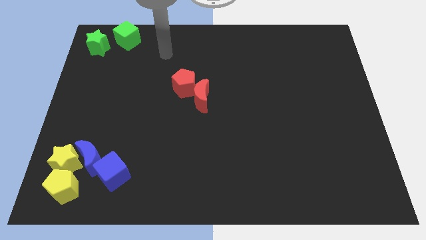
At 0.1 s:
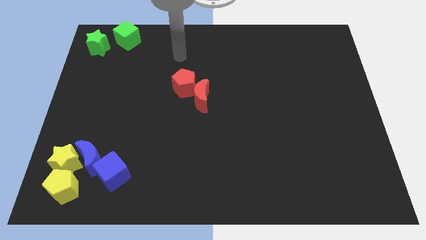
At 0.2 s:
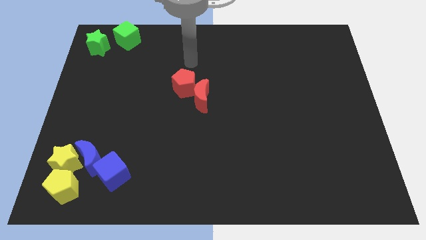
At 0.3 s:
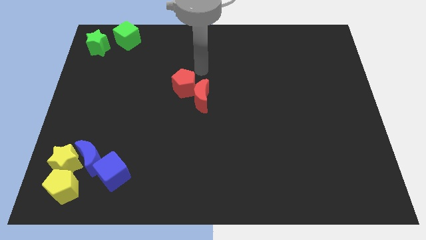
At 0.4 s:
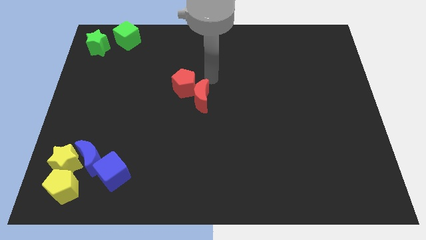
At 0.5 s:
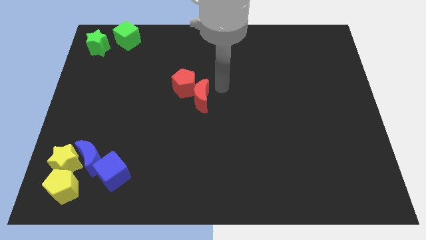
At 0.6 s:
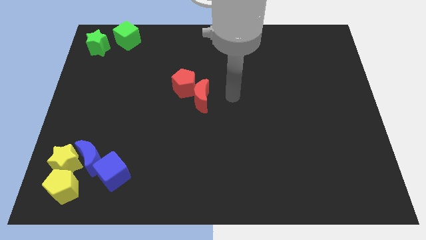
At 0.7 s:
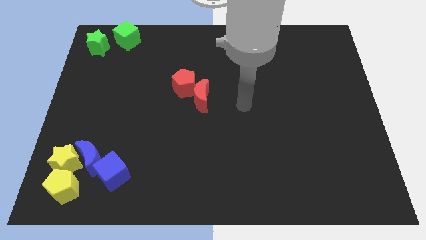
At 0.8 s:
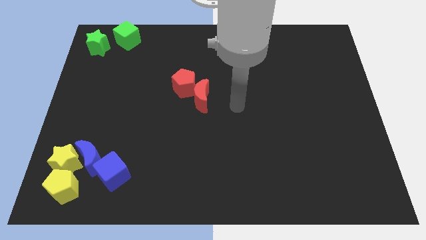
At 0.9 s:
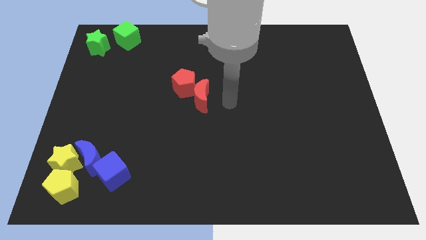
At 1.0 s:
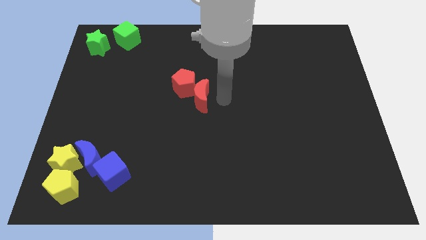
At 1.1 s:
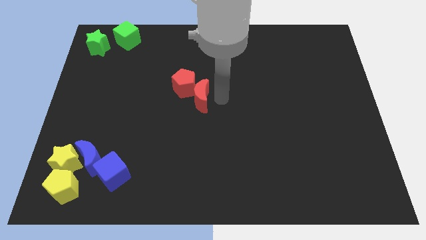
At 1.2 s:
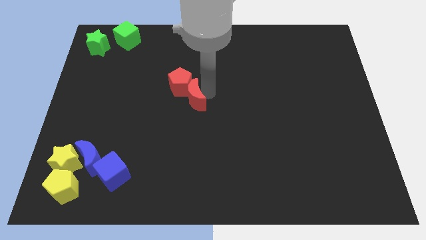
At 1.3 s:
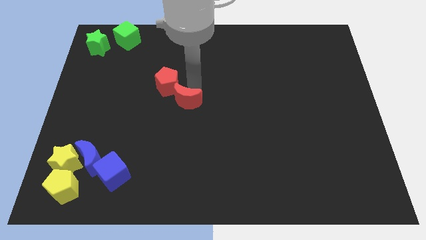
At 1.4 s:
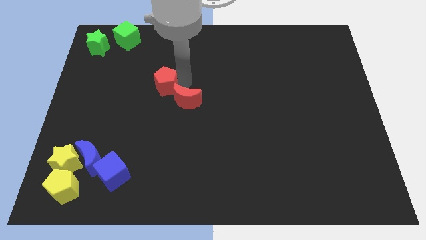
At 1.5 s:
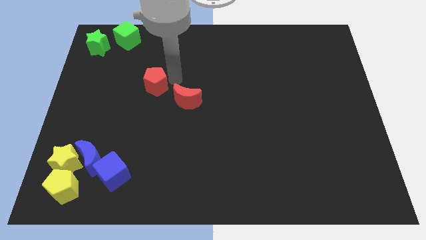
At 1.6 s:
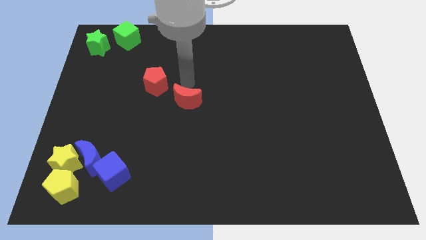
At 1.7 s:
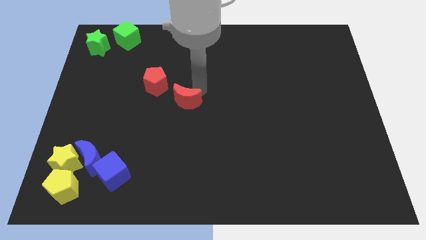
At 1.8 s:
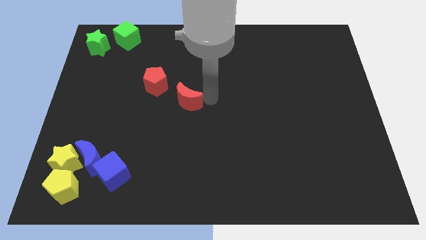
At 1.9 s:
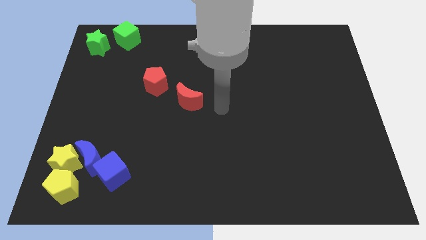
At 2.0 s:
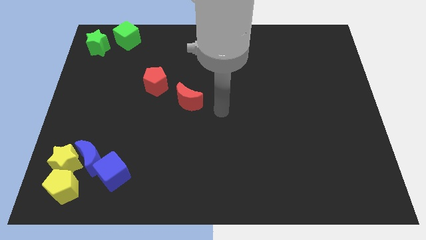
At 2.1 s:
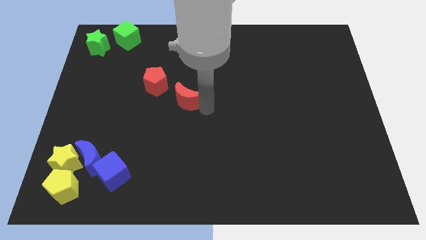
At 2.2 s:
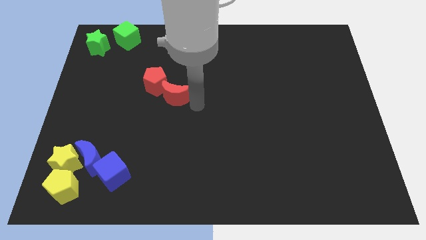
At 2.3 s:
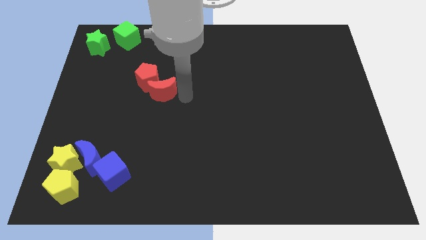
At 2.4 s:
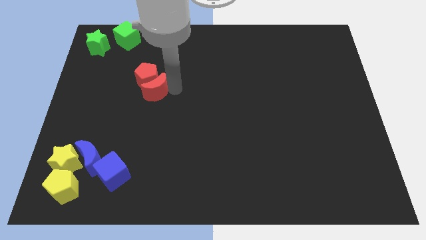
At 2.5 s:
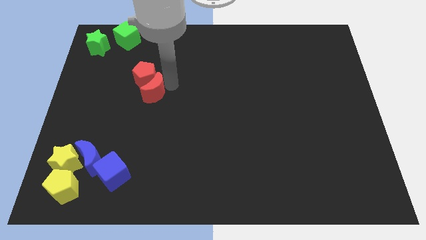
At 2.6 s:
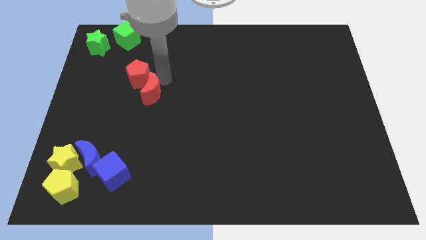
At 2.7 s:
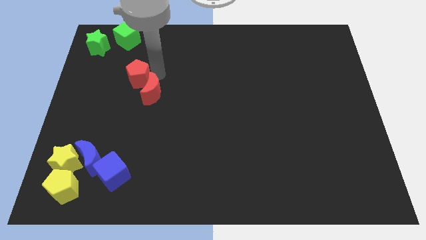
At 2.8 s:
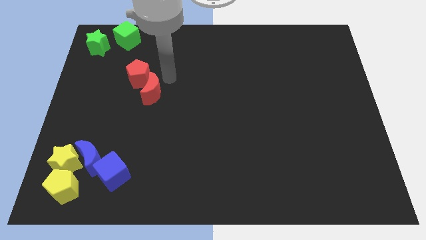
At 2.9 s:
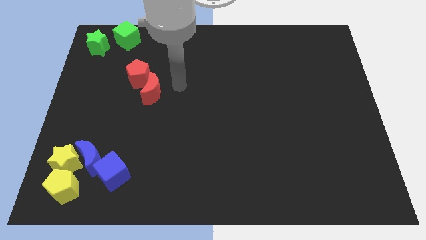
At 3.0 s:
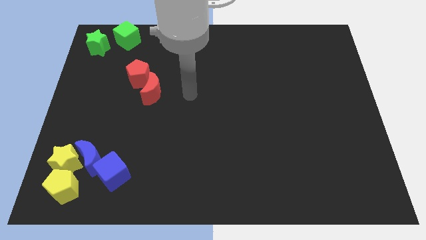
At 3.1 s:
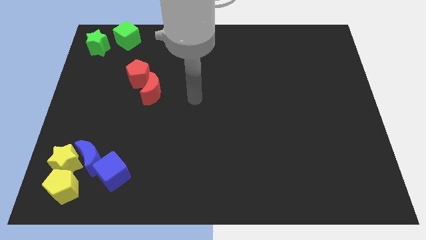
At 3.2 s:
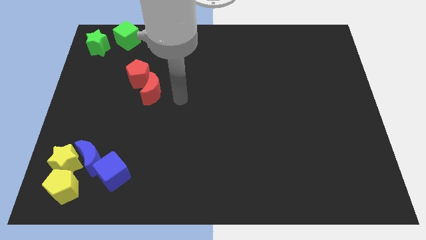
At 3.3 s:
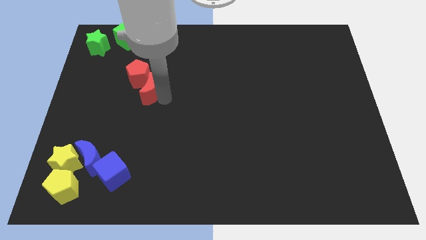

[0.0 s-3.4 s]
push the red blocks towards the green blocks

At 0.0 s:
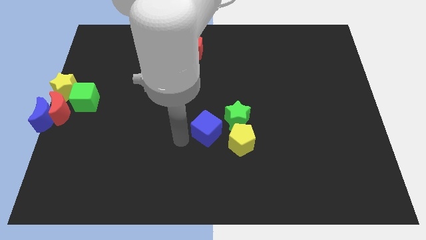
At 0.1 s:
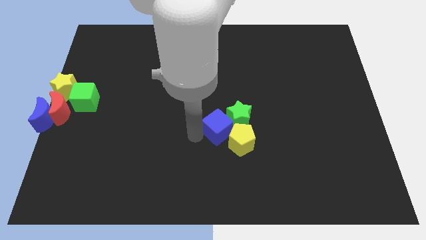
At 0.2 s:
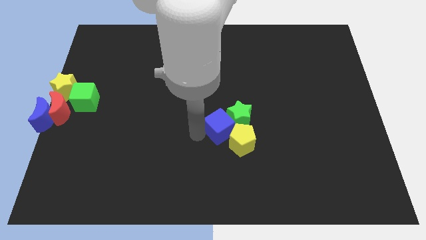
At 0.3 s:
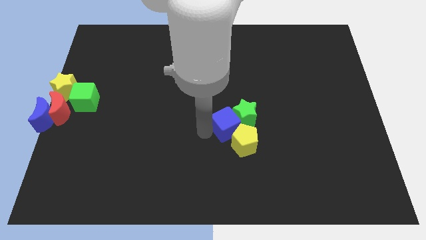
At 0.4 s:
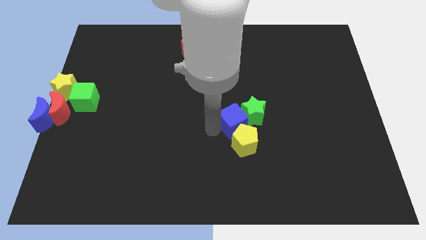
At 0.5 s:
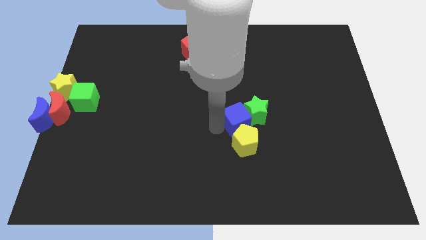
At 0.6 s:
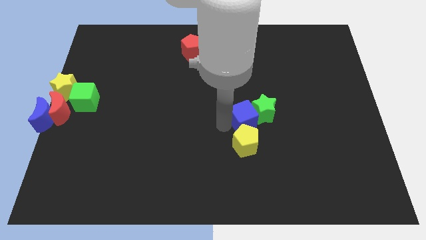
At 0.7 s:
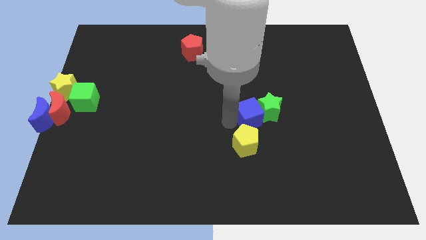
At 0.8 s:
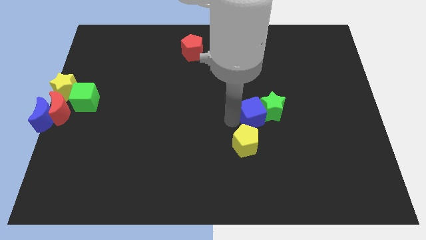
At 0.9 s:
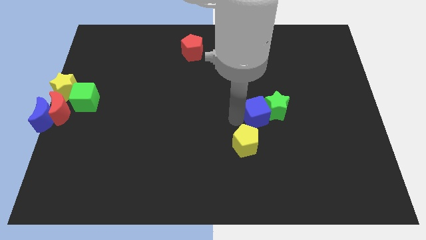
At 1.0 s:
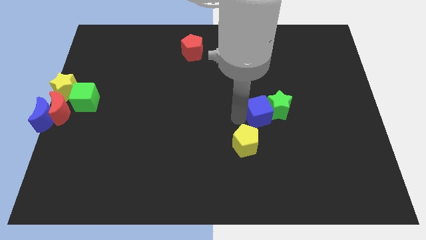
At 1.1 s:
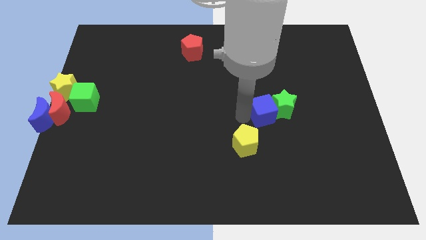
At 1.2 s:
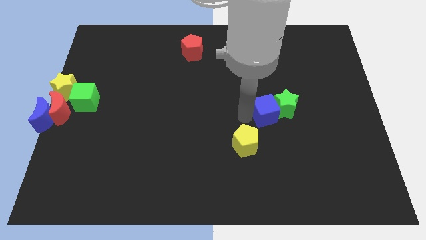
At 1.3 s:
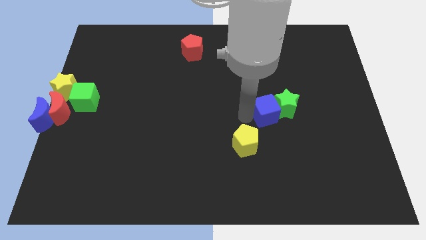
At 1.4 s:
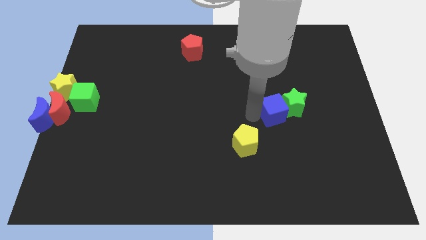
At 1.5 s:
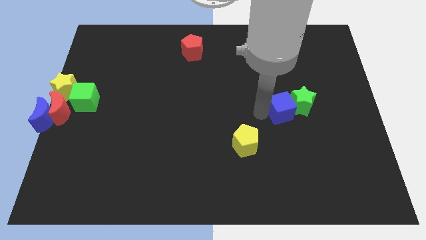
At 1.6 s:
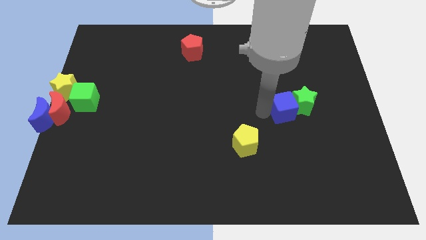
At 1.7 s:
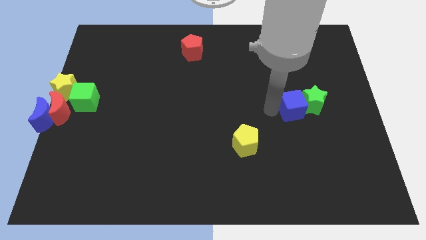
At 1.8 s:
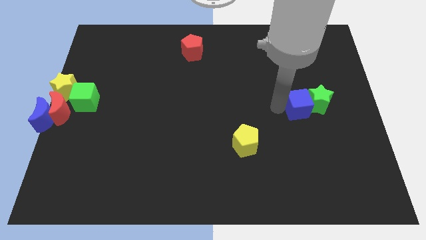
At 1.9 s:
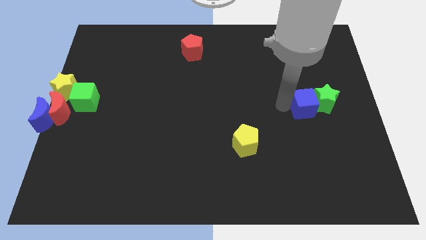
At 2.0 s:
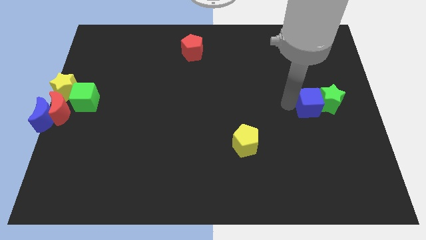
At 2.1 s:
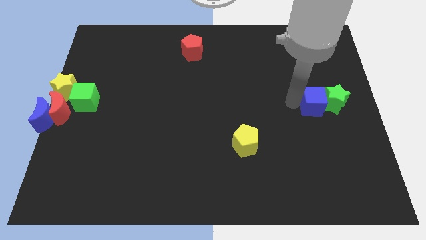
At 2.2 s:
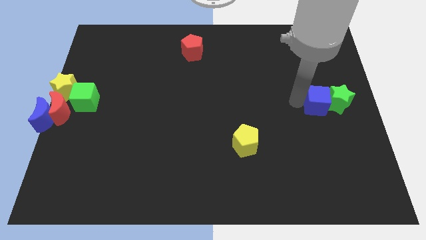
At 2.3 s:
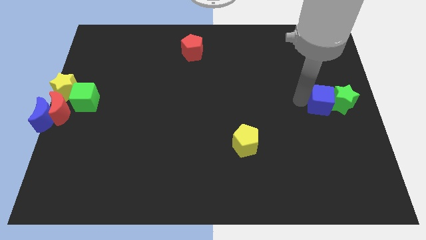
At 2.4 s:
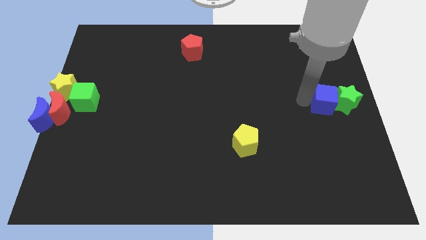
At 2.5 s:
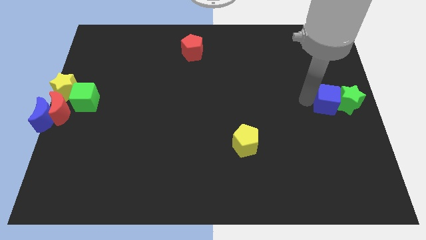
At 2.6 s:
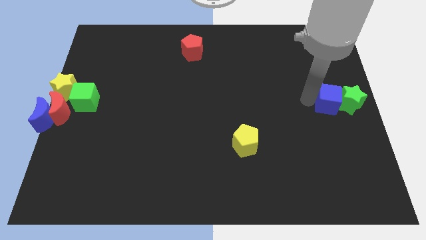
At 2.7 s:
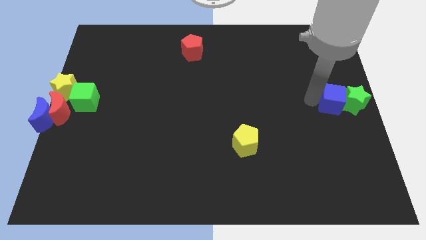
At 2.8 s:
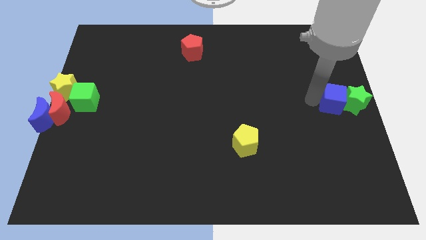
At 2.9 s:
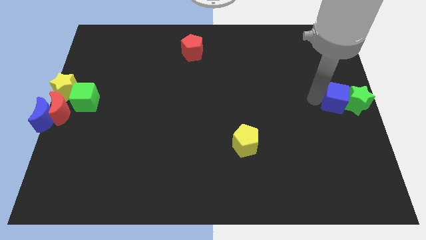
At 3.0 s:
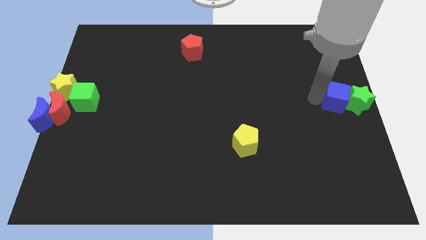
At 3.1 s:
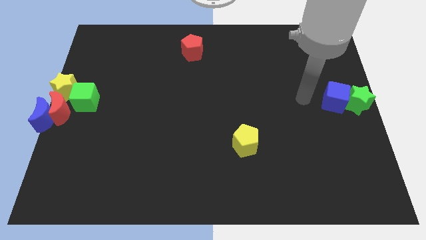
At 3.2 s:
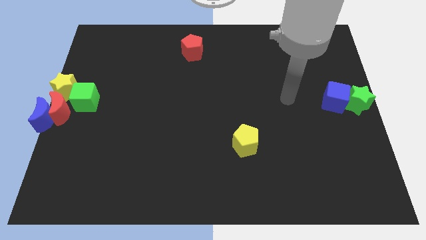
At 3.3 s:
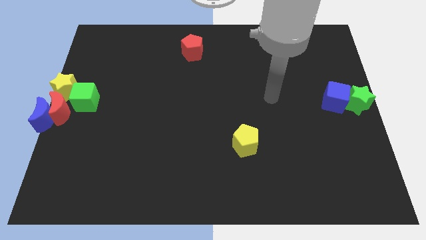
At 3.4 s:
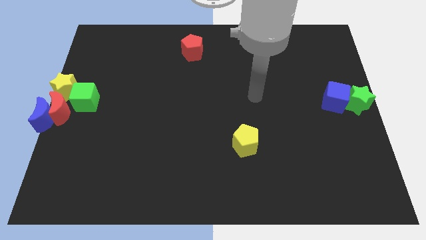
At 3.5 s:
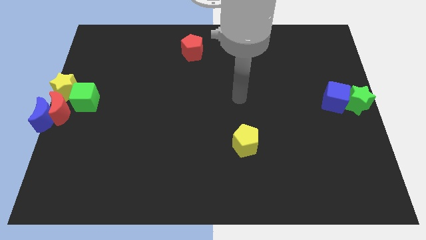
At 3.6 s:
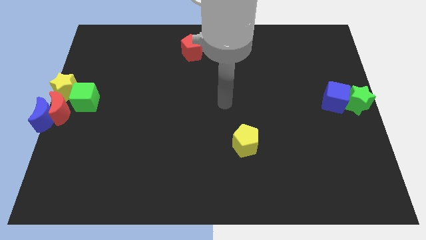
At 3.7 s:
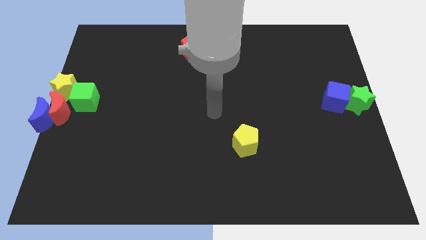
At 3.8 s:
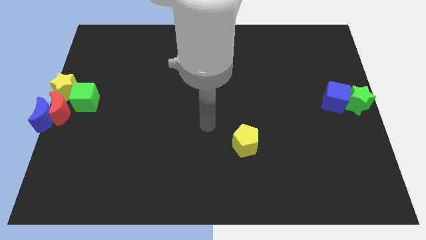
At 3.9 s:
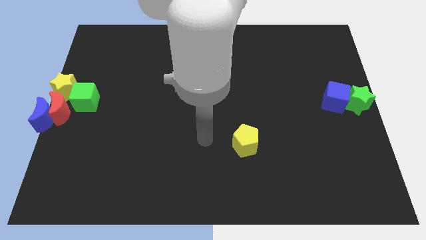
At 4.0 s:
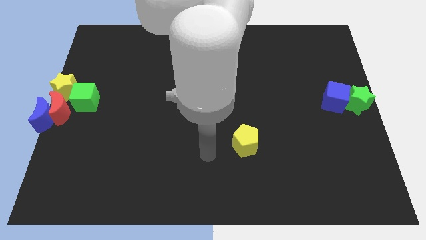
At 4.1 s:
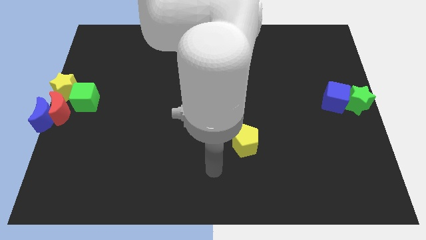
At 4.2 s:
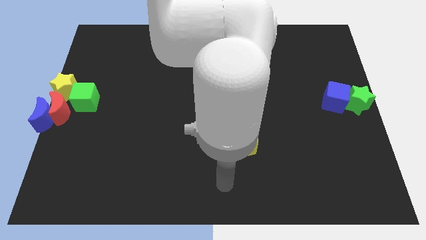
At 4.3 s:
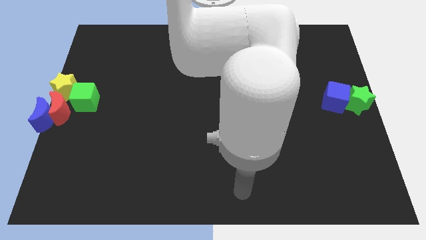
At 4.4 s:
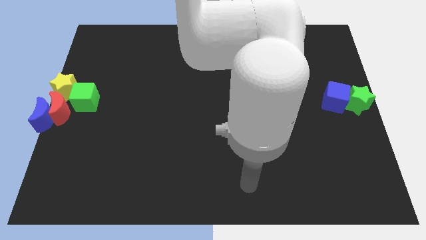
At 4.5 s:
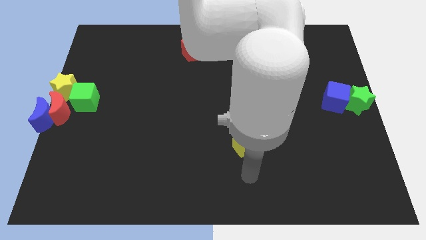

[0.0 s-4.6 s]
push the blue cube into the green star at right center of the board

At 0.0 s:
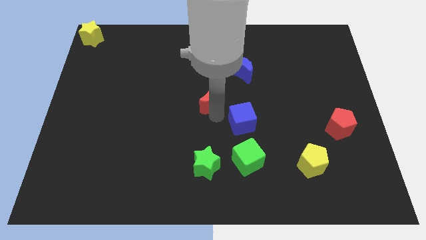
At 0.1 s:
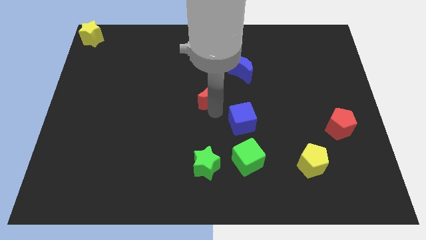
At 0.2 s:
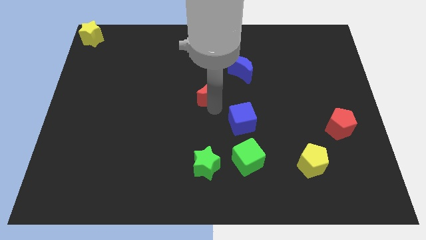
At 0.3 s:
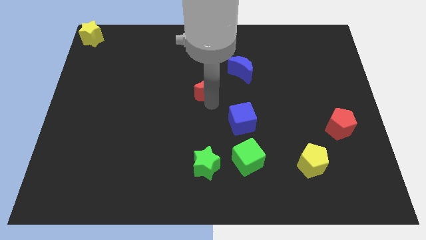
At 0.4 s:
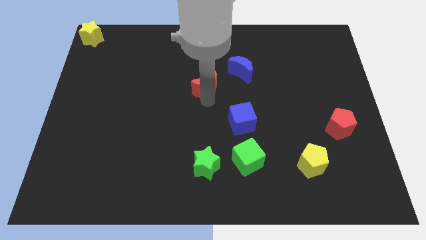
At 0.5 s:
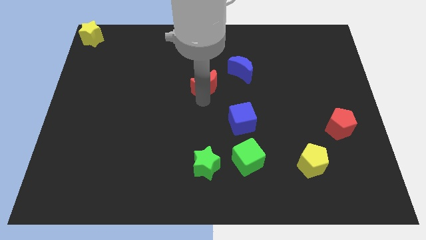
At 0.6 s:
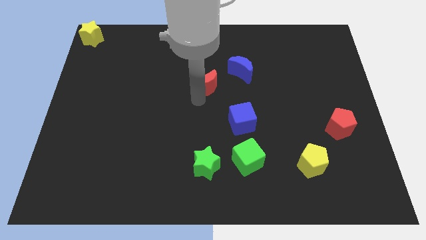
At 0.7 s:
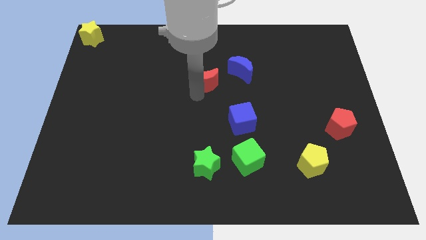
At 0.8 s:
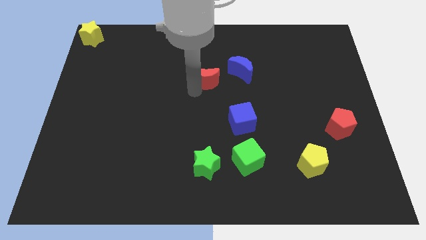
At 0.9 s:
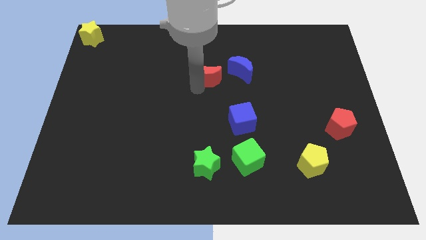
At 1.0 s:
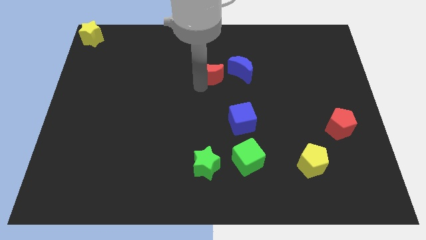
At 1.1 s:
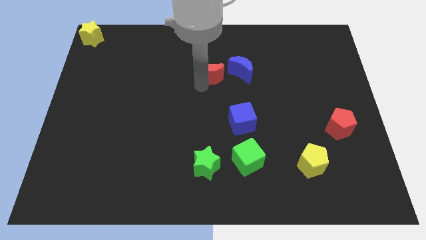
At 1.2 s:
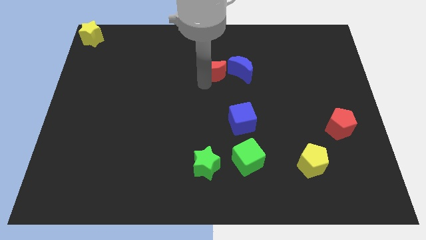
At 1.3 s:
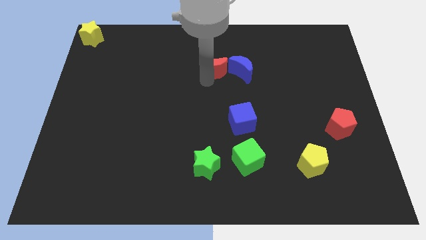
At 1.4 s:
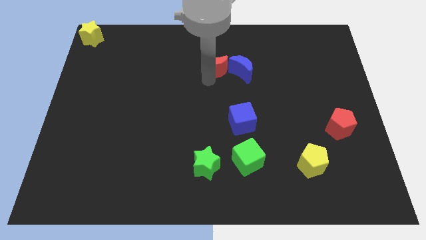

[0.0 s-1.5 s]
move the red crescent towards left to the blue crescent
